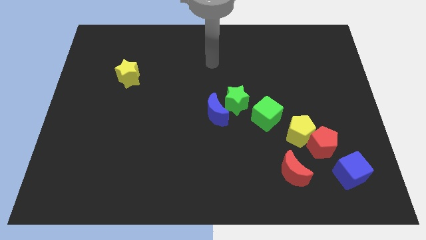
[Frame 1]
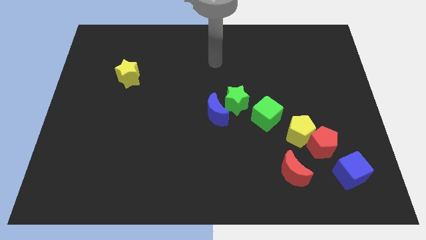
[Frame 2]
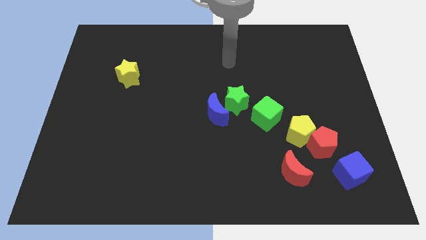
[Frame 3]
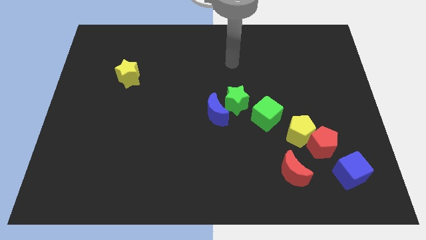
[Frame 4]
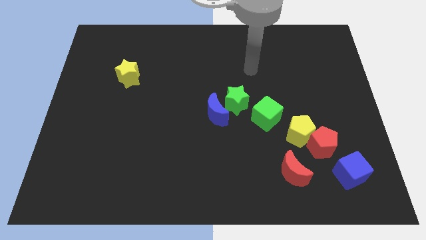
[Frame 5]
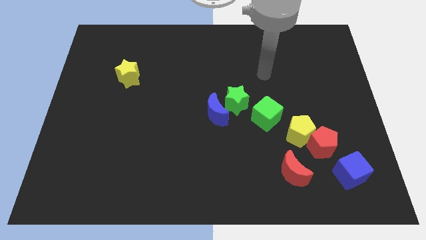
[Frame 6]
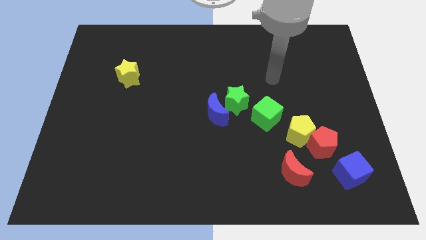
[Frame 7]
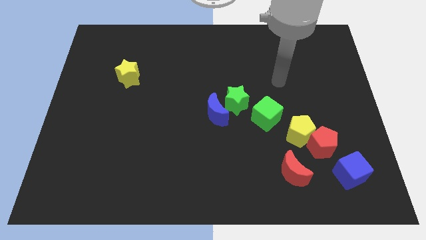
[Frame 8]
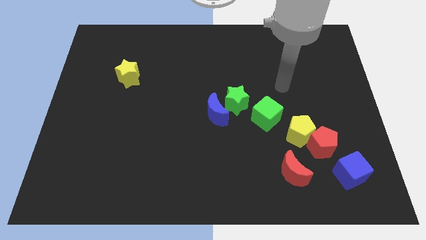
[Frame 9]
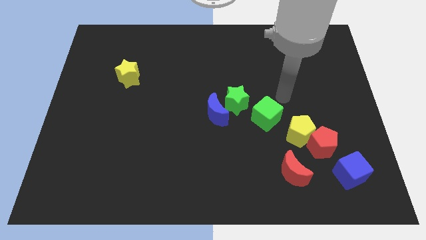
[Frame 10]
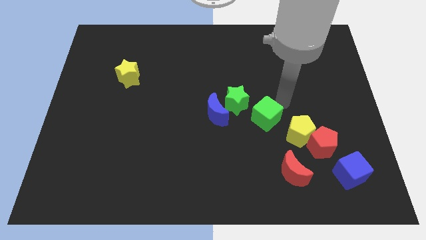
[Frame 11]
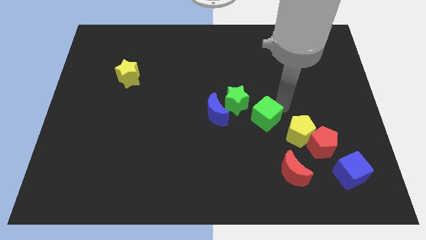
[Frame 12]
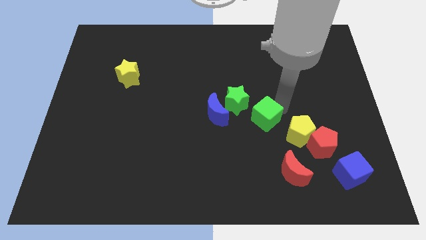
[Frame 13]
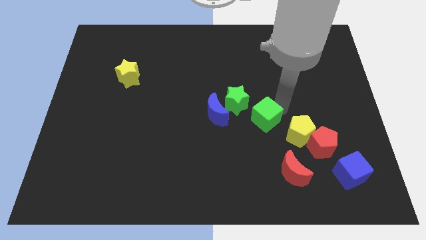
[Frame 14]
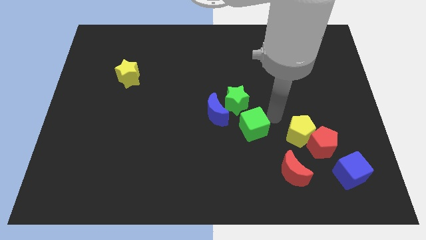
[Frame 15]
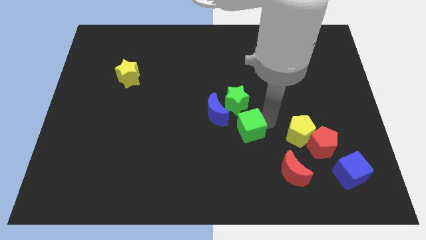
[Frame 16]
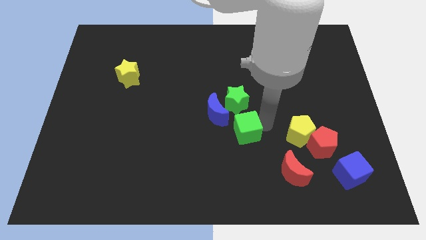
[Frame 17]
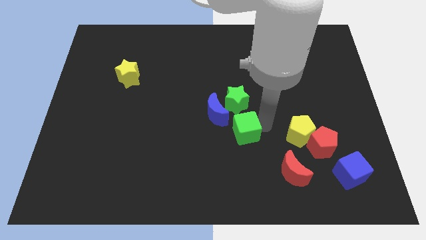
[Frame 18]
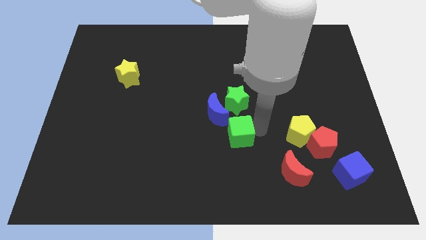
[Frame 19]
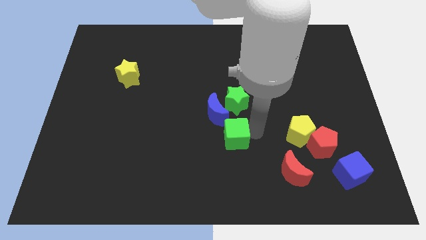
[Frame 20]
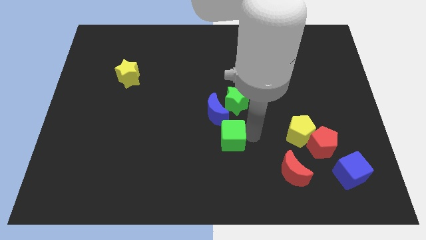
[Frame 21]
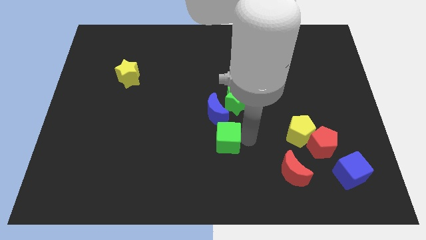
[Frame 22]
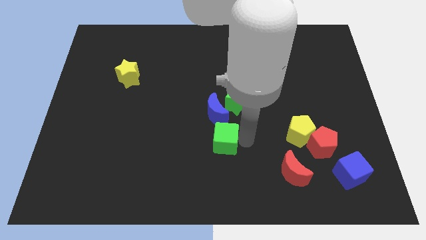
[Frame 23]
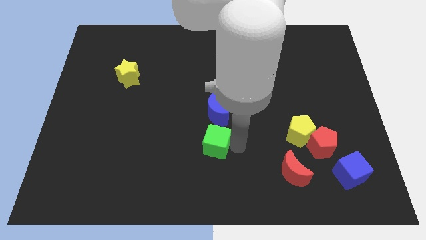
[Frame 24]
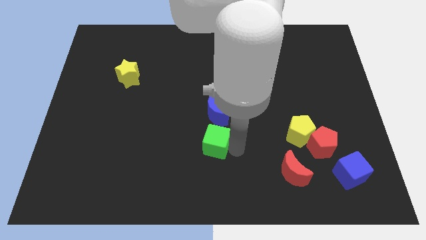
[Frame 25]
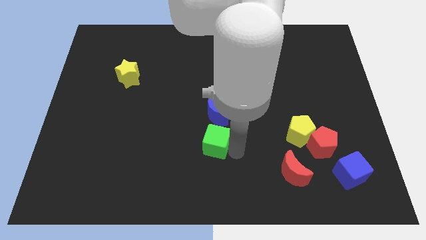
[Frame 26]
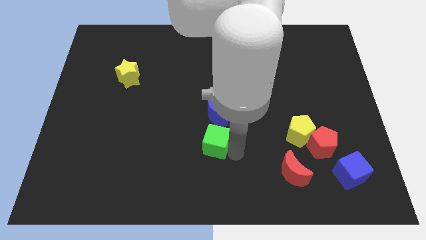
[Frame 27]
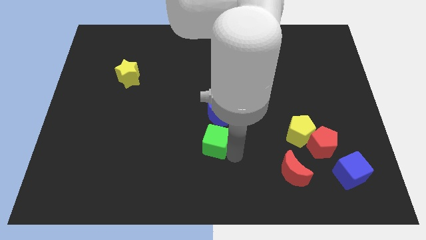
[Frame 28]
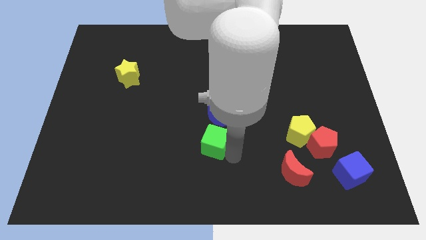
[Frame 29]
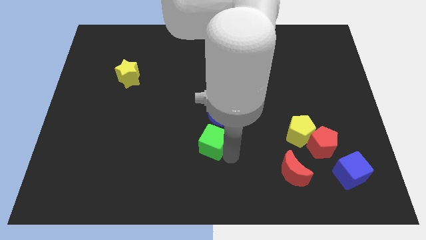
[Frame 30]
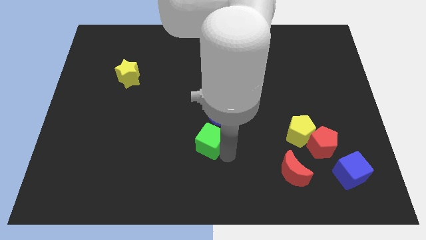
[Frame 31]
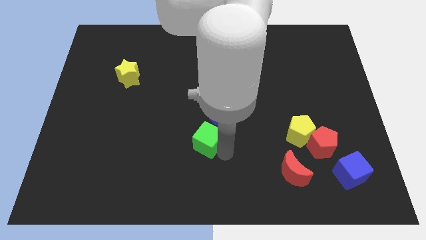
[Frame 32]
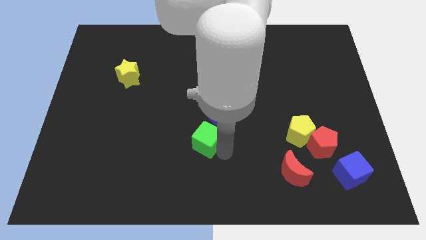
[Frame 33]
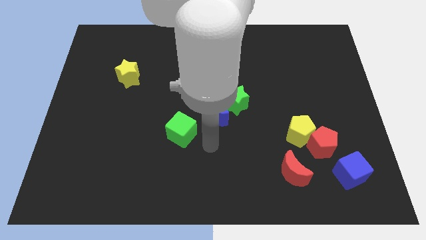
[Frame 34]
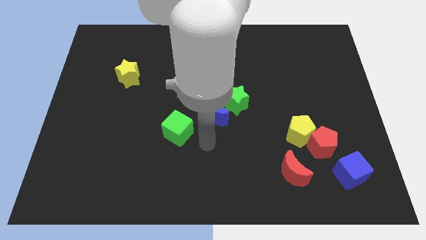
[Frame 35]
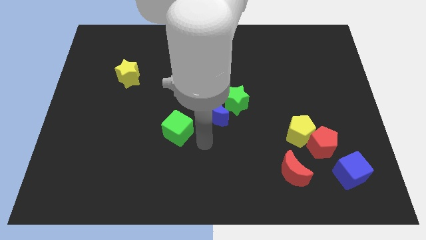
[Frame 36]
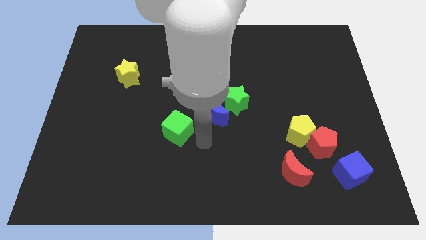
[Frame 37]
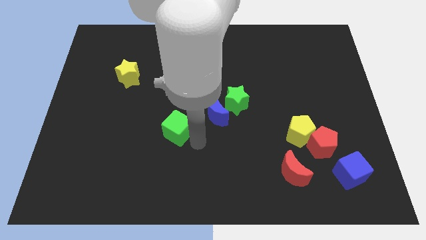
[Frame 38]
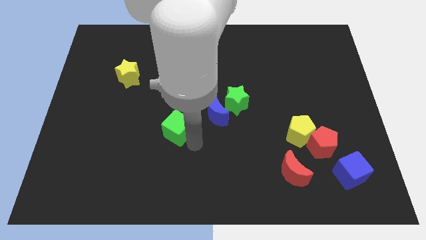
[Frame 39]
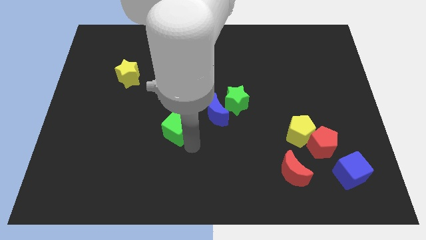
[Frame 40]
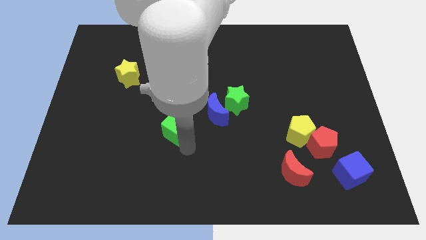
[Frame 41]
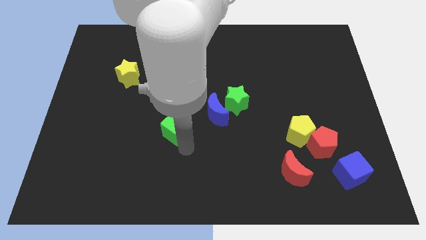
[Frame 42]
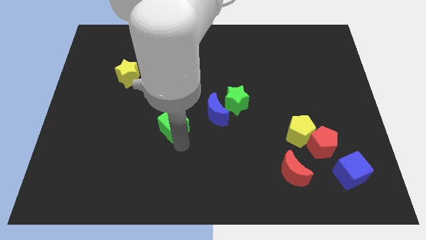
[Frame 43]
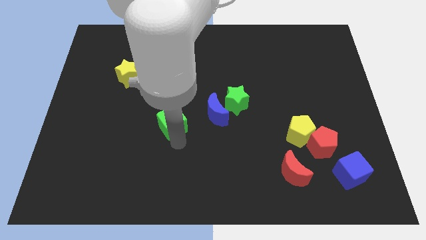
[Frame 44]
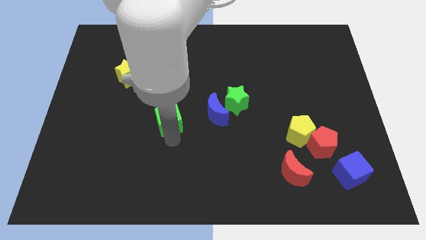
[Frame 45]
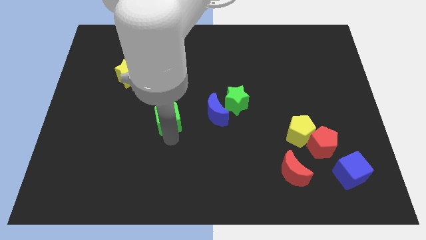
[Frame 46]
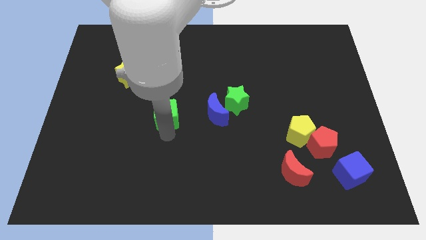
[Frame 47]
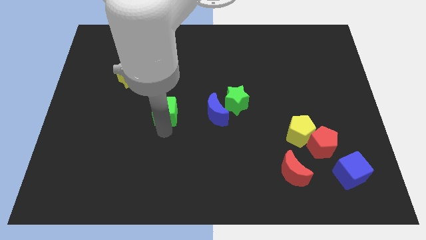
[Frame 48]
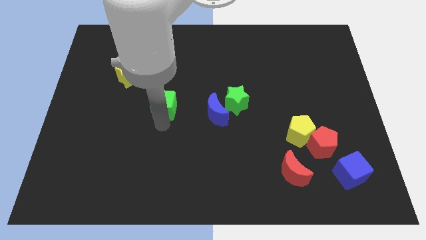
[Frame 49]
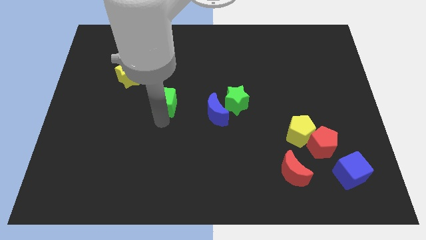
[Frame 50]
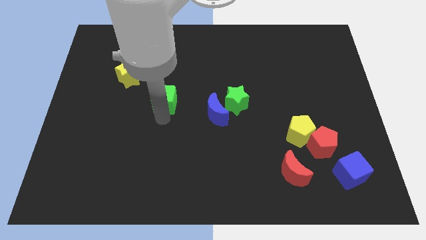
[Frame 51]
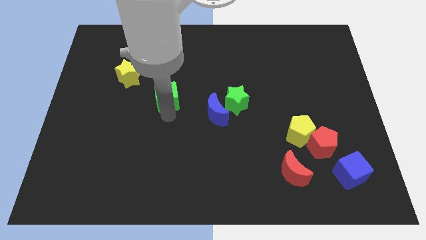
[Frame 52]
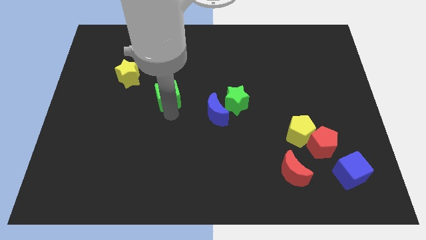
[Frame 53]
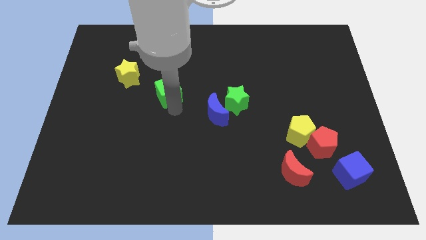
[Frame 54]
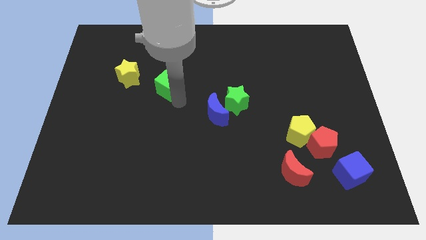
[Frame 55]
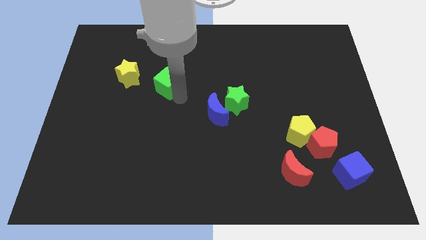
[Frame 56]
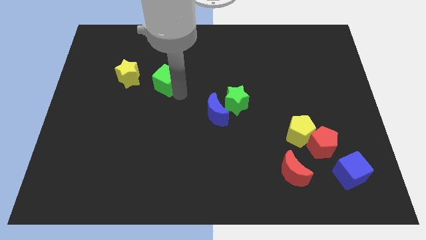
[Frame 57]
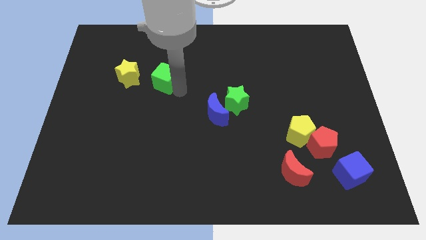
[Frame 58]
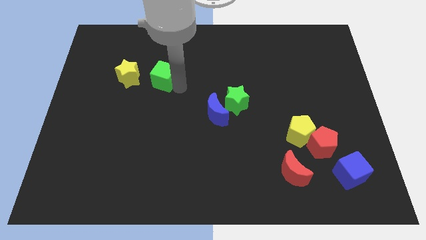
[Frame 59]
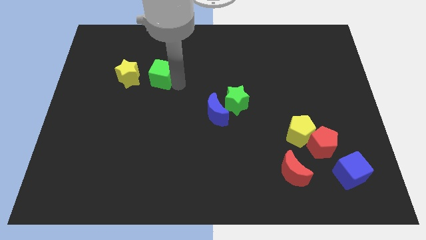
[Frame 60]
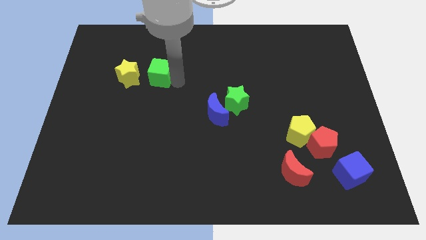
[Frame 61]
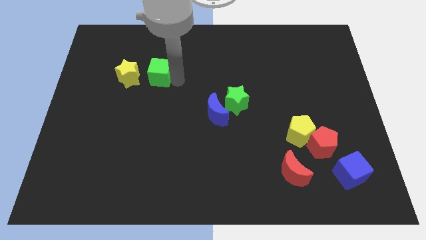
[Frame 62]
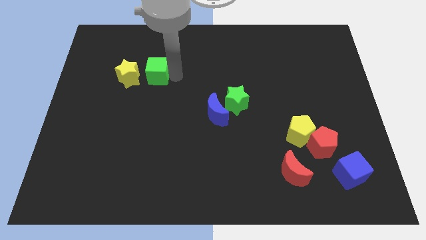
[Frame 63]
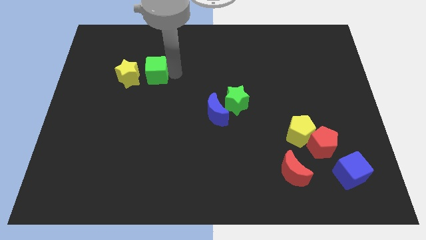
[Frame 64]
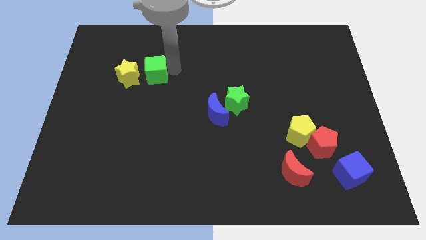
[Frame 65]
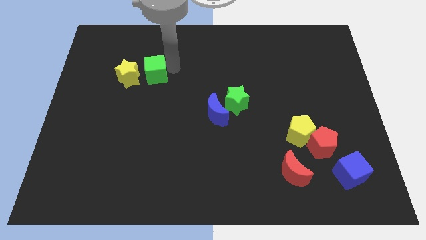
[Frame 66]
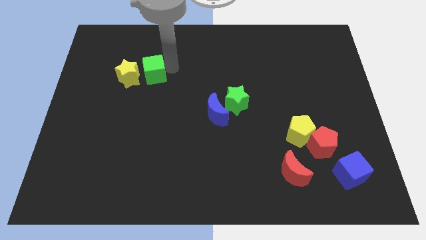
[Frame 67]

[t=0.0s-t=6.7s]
move the green cube next to the yellow star

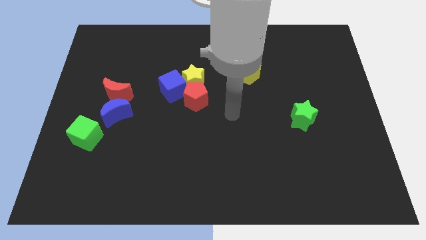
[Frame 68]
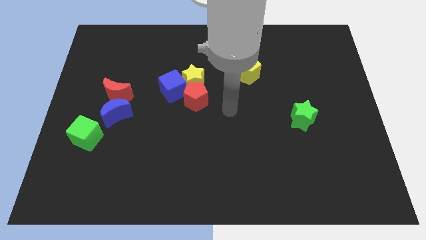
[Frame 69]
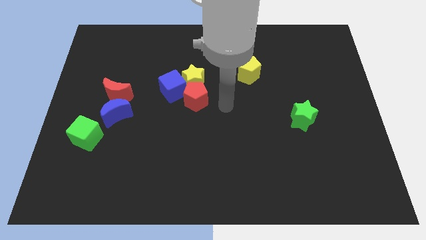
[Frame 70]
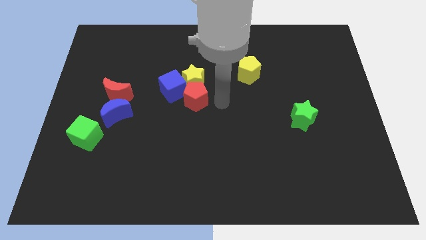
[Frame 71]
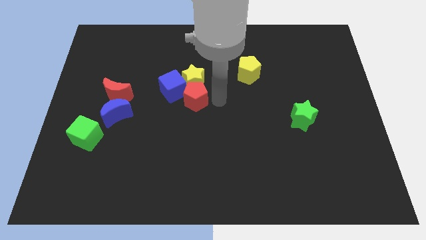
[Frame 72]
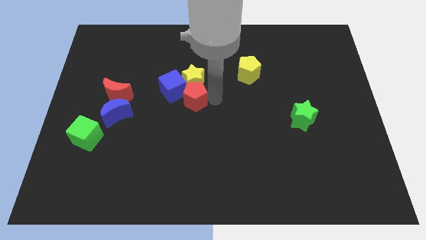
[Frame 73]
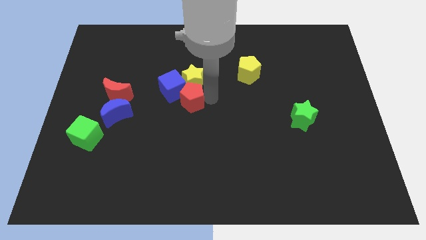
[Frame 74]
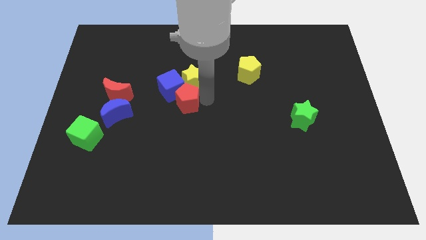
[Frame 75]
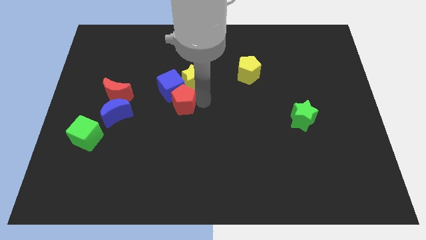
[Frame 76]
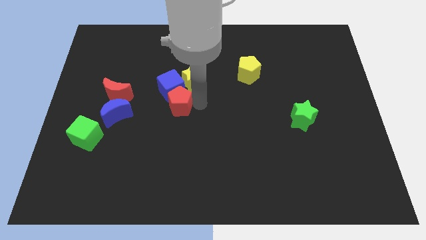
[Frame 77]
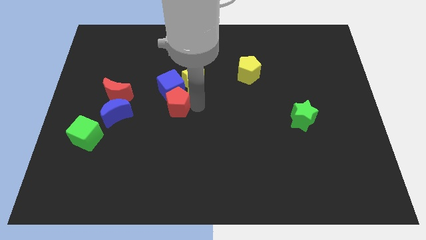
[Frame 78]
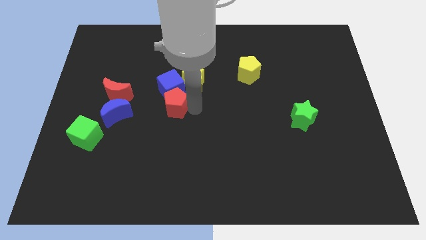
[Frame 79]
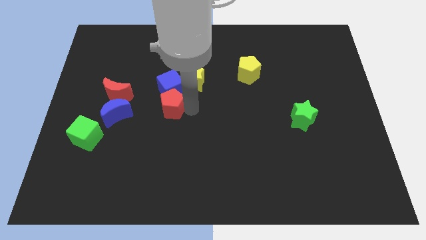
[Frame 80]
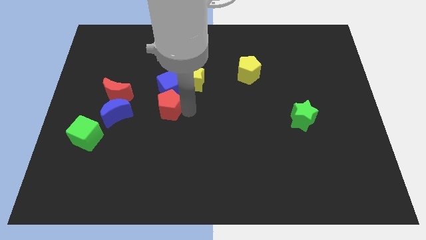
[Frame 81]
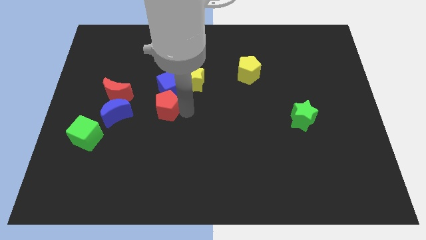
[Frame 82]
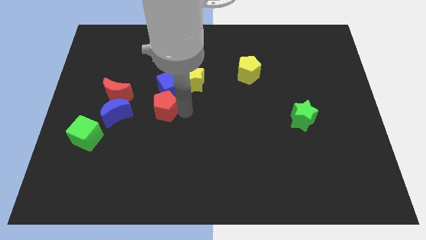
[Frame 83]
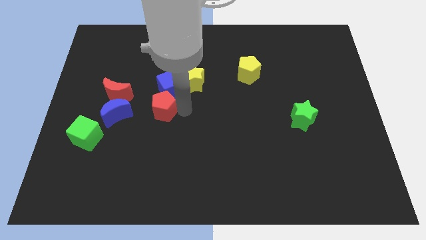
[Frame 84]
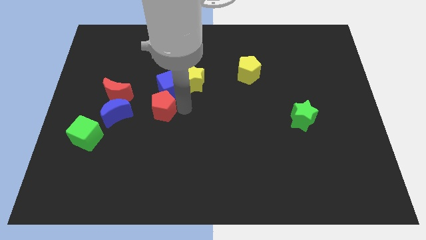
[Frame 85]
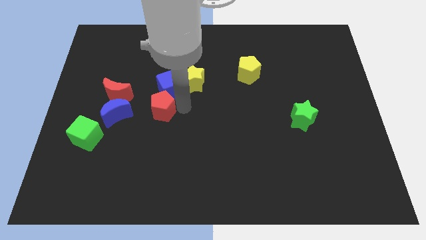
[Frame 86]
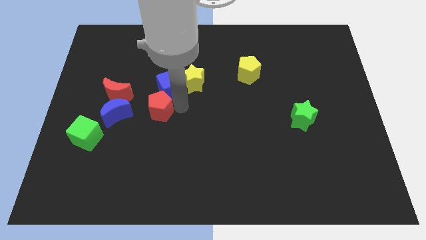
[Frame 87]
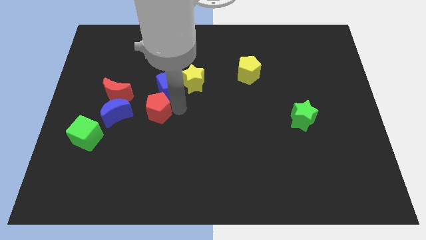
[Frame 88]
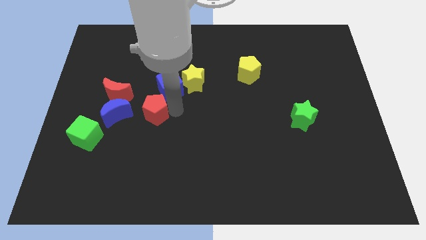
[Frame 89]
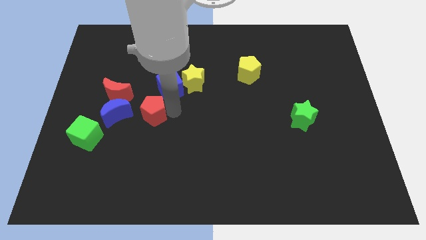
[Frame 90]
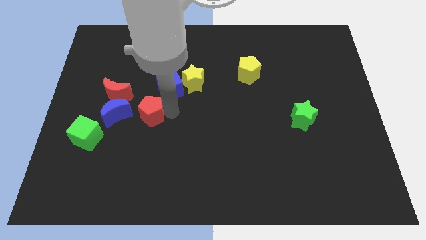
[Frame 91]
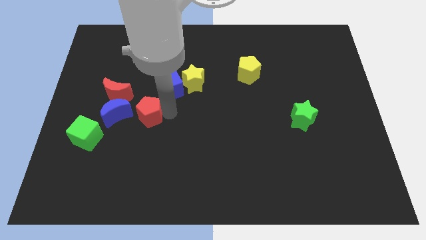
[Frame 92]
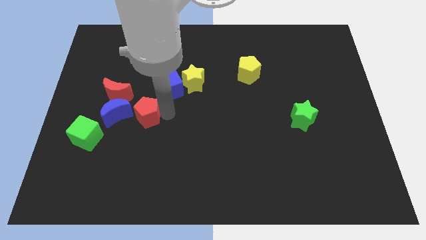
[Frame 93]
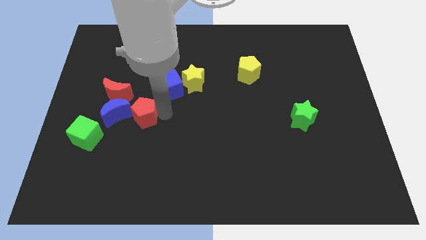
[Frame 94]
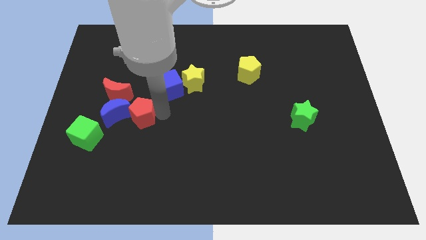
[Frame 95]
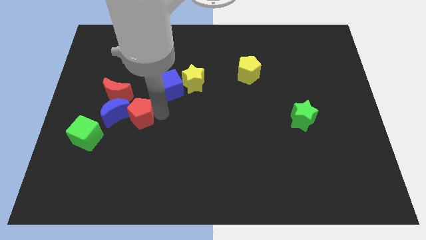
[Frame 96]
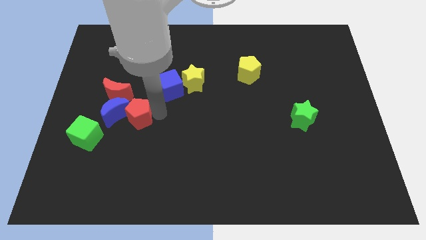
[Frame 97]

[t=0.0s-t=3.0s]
move the red pentagon close to the blue moon
